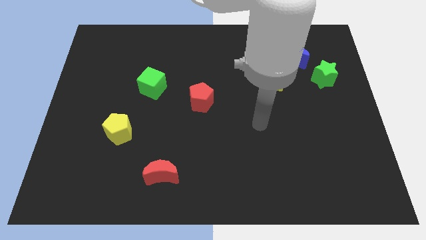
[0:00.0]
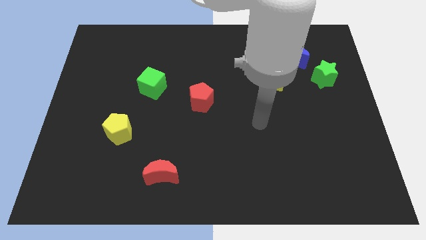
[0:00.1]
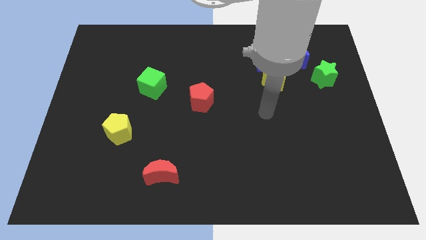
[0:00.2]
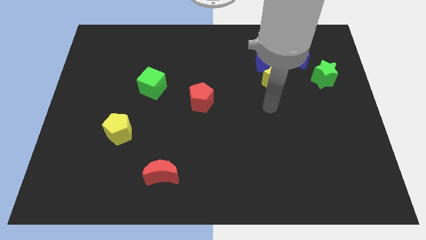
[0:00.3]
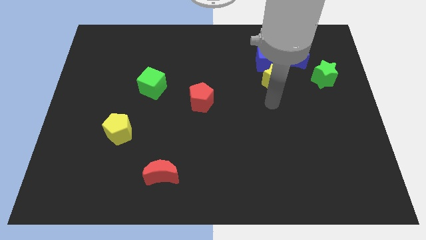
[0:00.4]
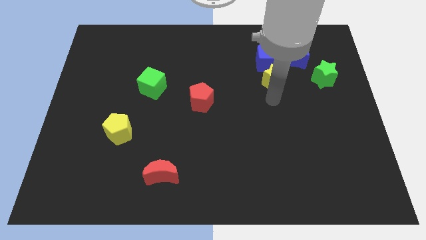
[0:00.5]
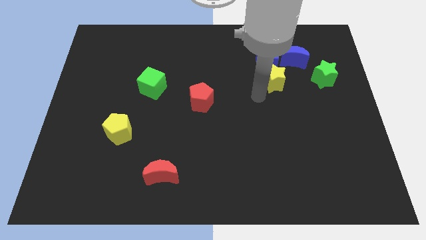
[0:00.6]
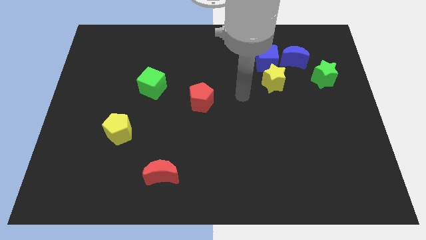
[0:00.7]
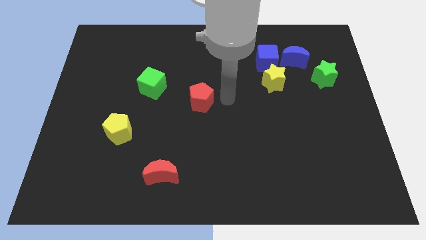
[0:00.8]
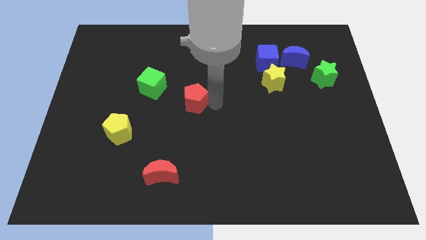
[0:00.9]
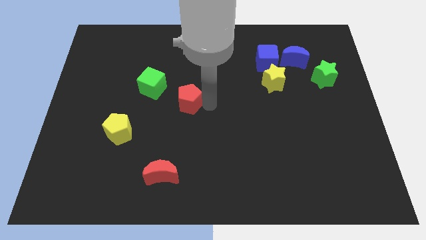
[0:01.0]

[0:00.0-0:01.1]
slide the red pentagon towards the right of the green cube

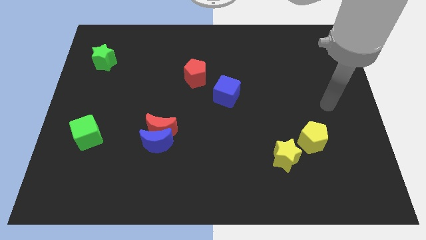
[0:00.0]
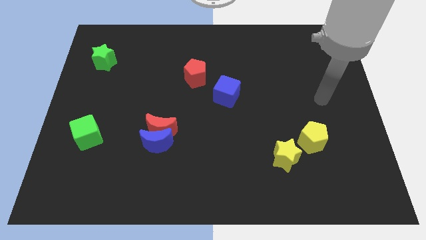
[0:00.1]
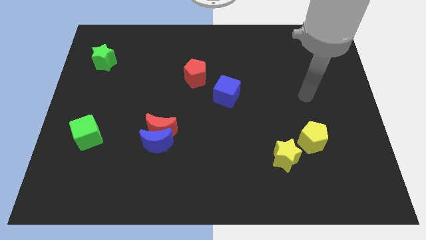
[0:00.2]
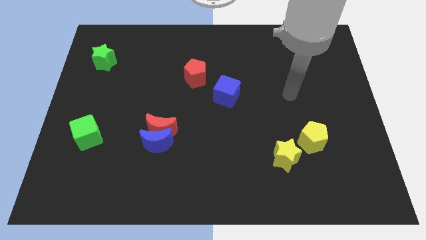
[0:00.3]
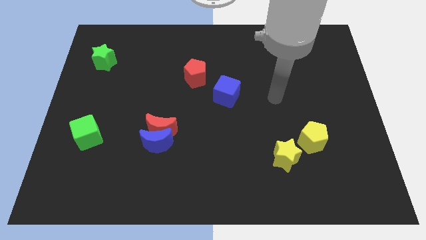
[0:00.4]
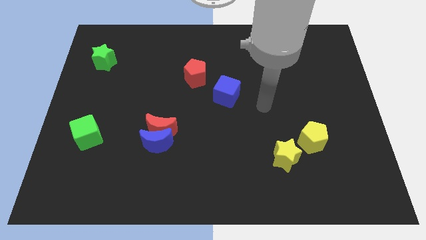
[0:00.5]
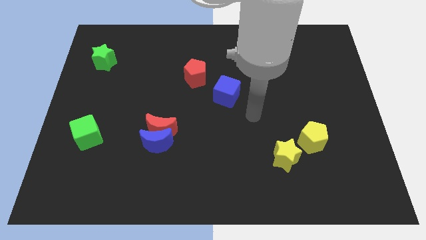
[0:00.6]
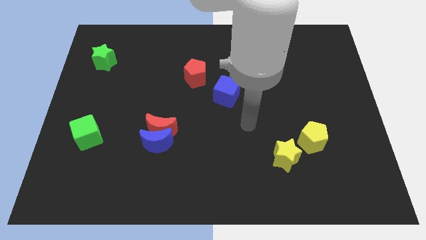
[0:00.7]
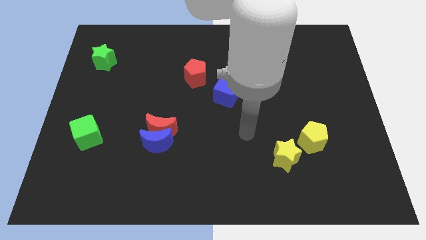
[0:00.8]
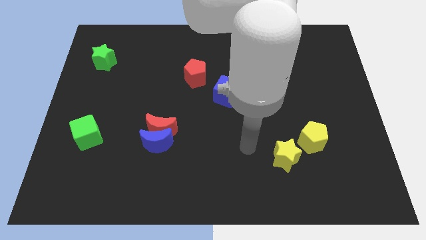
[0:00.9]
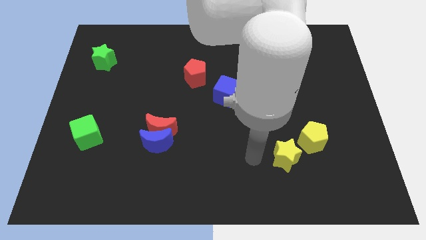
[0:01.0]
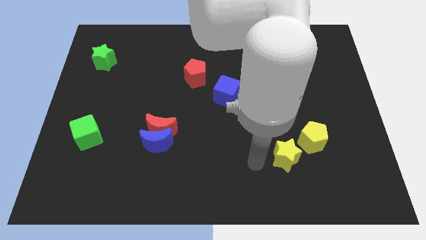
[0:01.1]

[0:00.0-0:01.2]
point the arm to the left of the yellow star

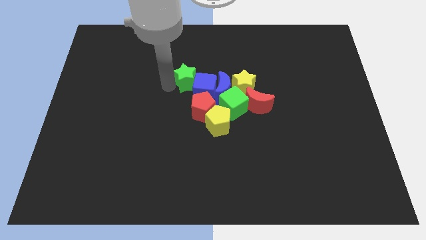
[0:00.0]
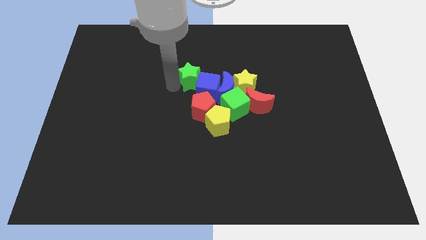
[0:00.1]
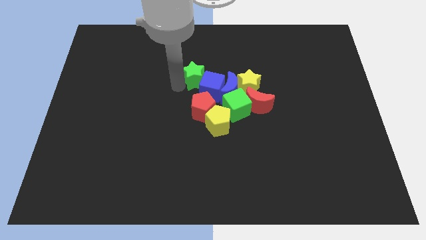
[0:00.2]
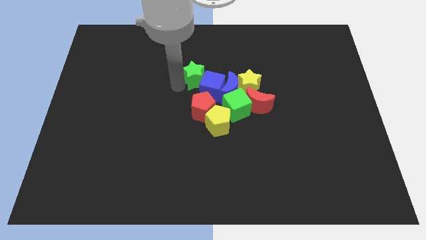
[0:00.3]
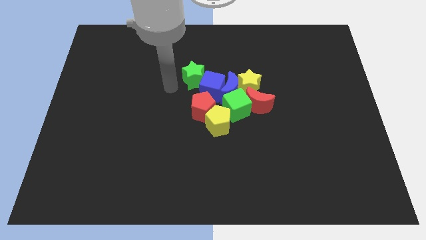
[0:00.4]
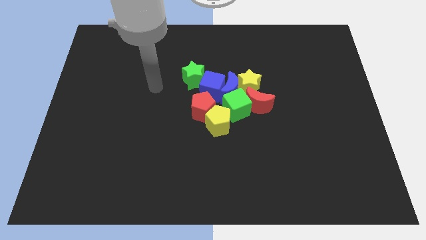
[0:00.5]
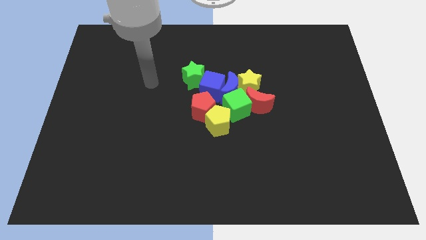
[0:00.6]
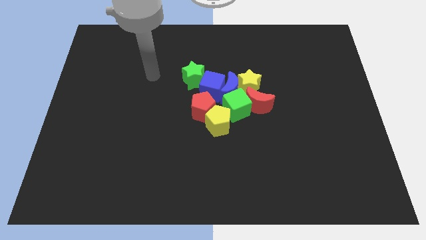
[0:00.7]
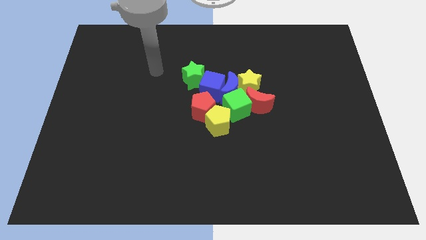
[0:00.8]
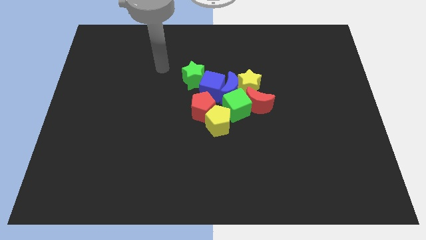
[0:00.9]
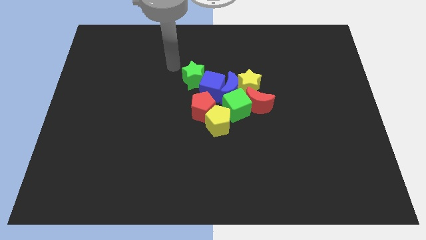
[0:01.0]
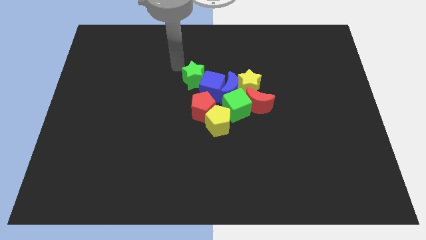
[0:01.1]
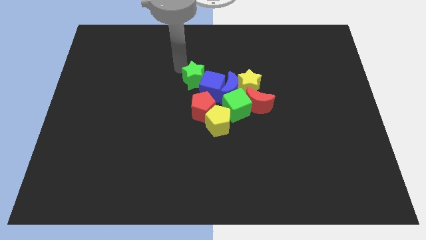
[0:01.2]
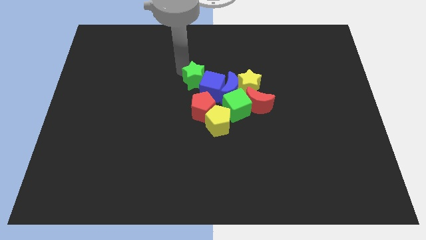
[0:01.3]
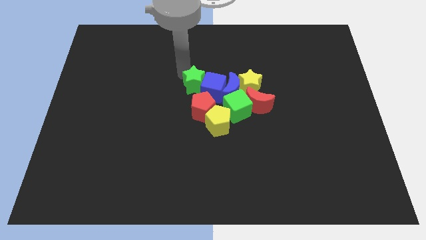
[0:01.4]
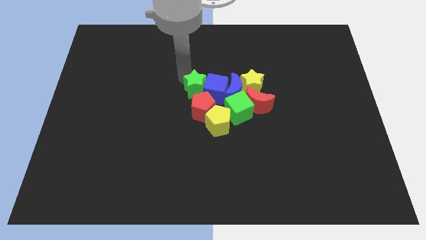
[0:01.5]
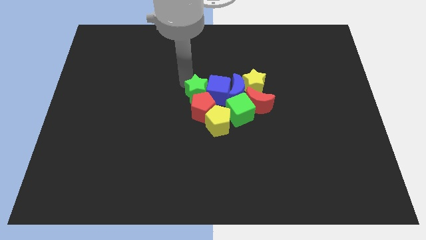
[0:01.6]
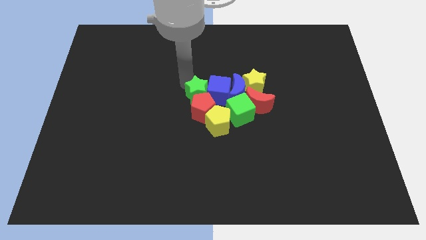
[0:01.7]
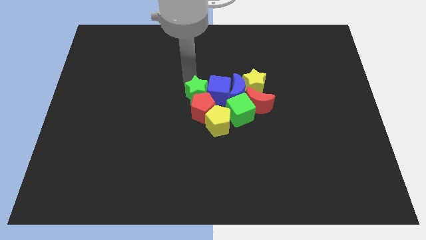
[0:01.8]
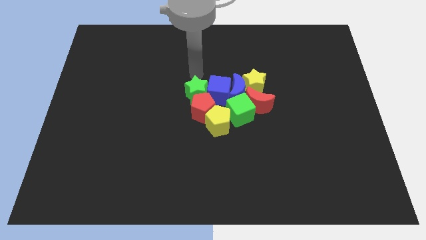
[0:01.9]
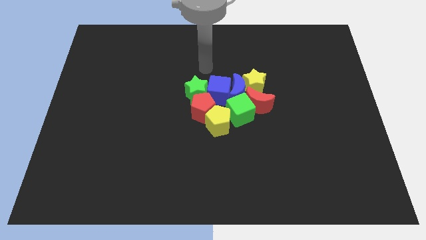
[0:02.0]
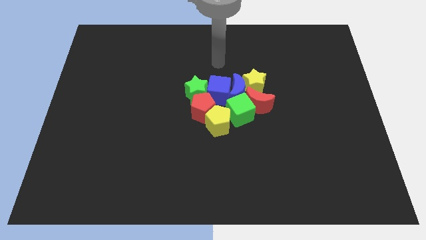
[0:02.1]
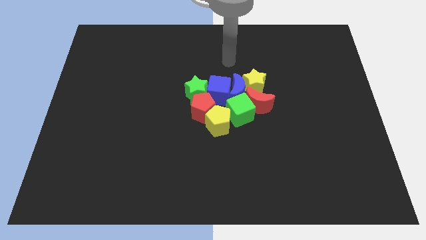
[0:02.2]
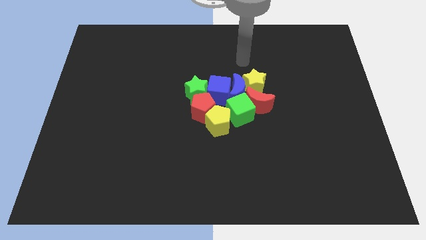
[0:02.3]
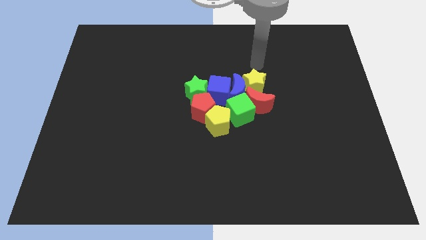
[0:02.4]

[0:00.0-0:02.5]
drag the green star into the group of blocks

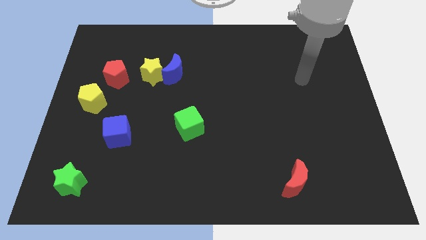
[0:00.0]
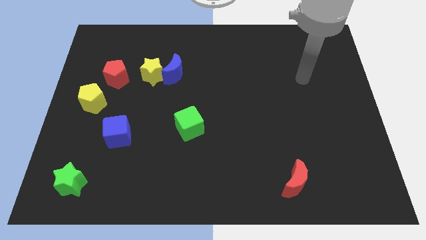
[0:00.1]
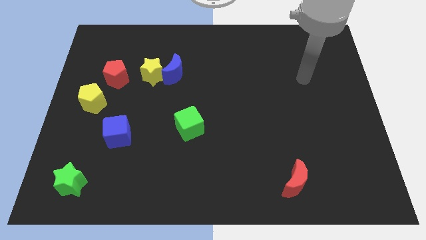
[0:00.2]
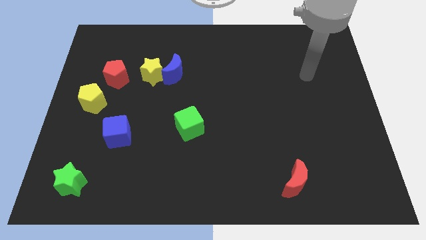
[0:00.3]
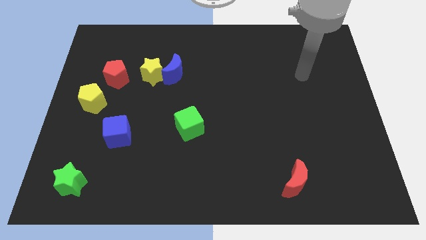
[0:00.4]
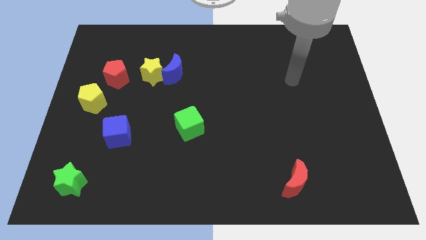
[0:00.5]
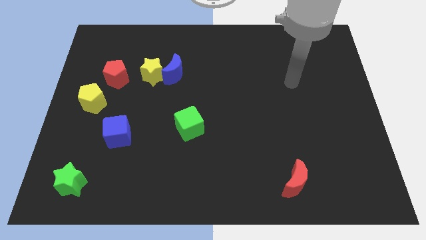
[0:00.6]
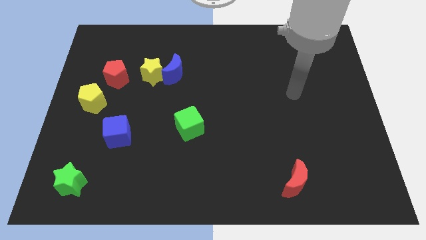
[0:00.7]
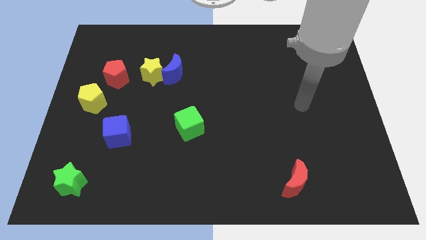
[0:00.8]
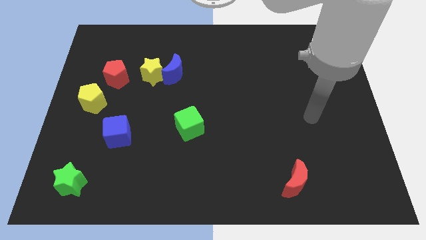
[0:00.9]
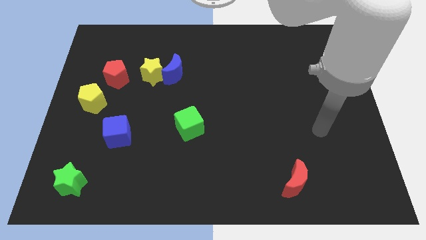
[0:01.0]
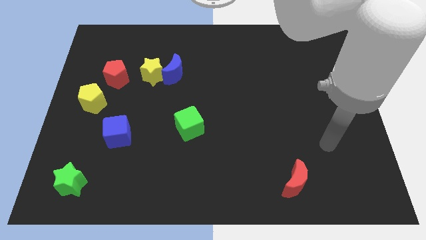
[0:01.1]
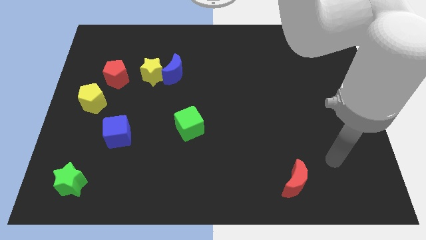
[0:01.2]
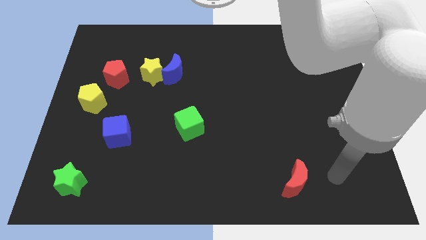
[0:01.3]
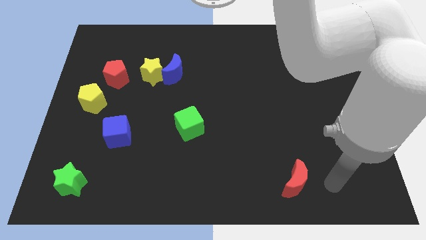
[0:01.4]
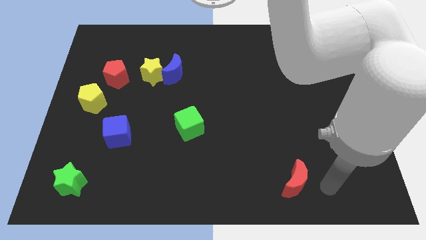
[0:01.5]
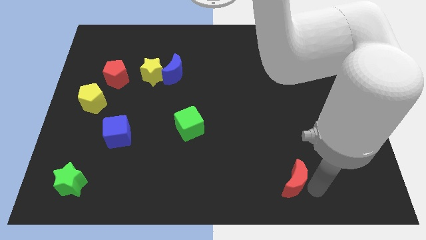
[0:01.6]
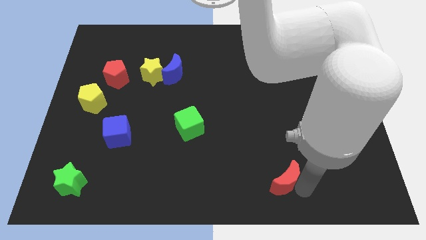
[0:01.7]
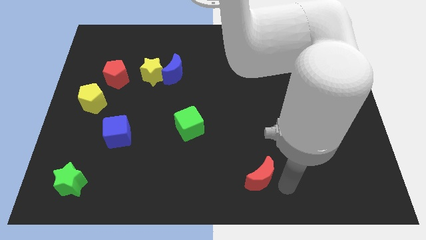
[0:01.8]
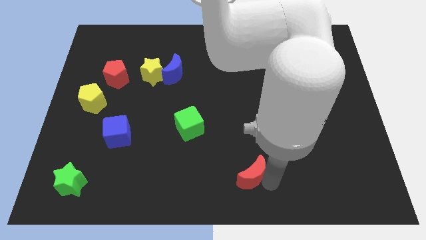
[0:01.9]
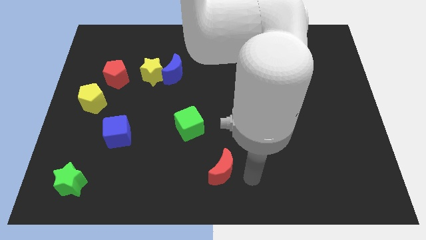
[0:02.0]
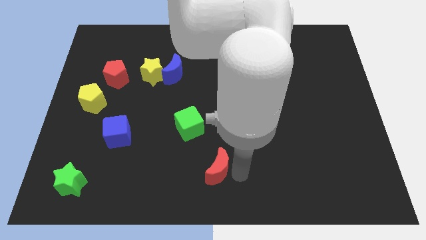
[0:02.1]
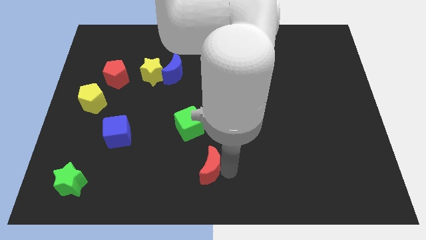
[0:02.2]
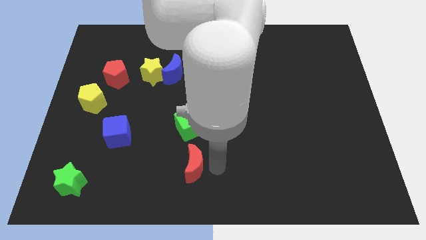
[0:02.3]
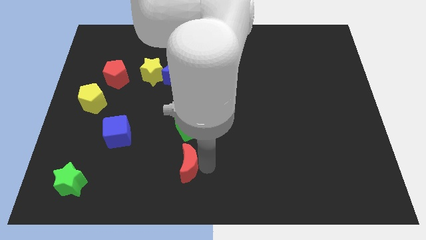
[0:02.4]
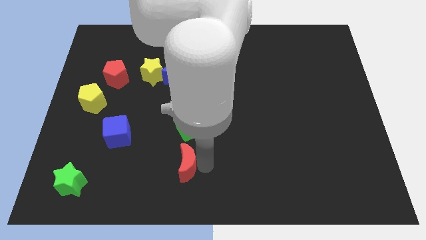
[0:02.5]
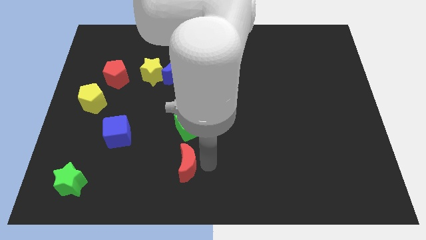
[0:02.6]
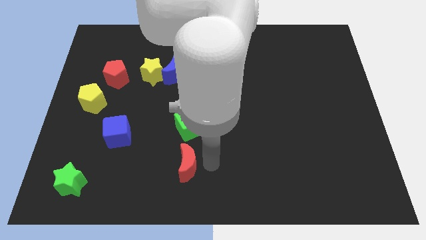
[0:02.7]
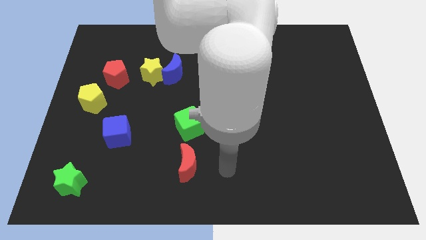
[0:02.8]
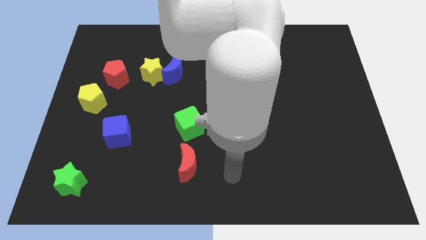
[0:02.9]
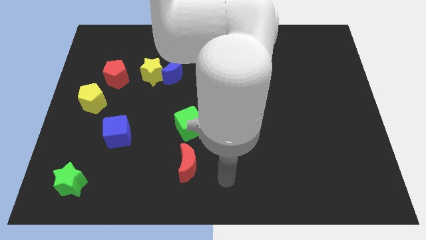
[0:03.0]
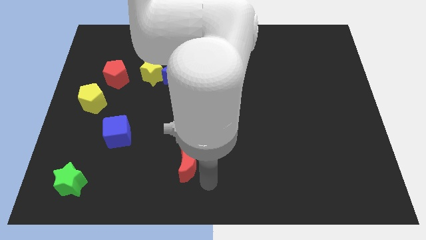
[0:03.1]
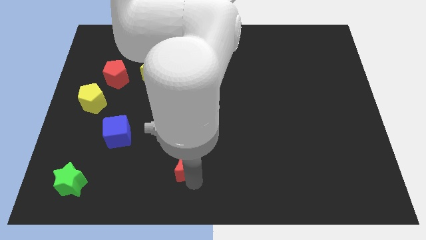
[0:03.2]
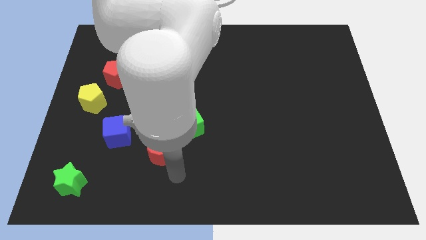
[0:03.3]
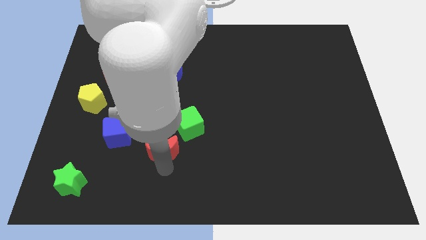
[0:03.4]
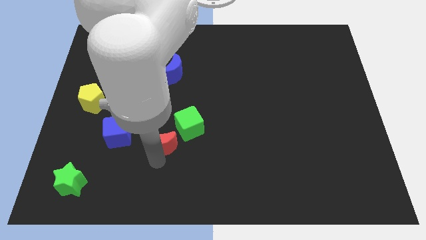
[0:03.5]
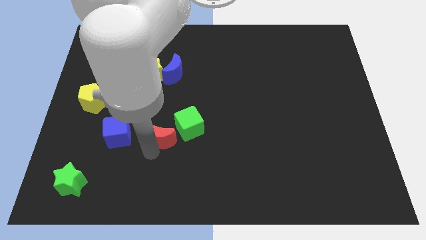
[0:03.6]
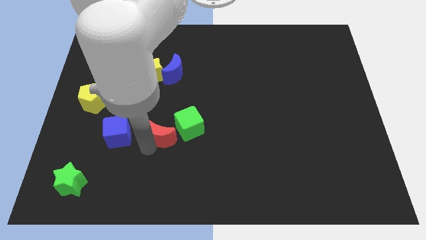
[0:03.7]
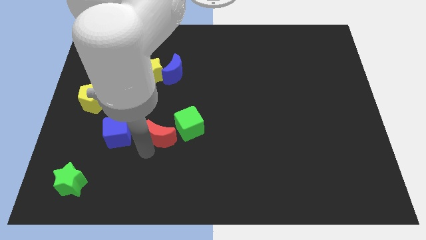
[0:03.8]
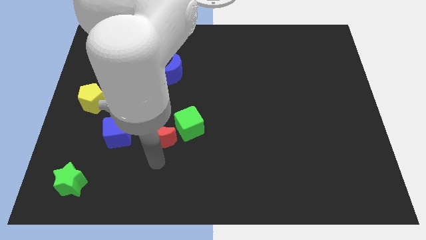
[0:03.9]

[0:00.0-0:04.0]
place the red crescent to the left of the green cube
